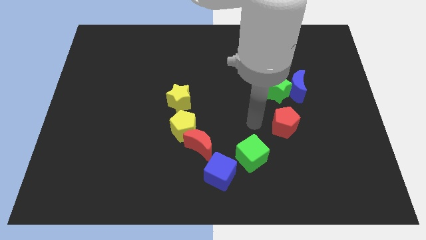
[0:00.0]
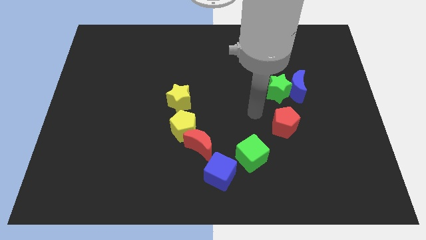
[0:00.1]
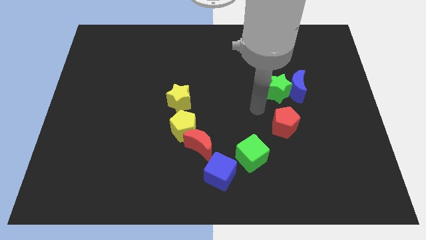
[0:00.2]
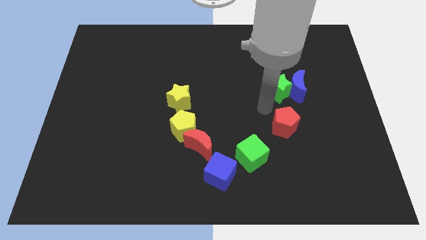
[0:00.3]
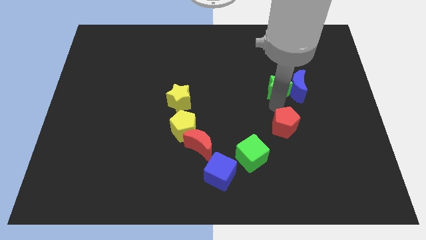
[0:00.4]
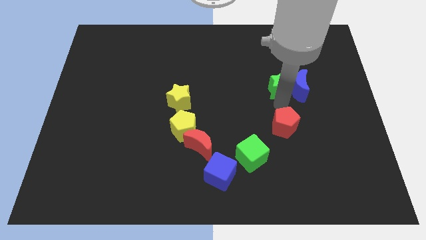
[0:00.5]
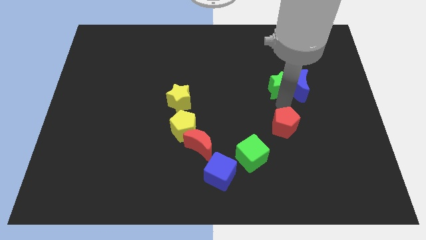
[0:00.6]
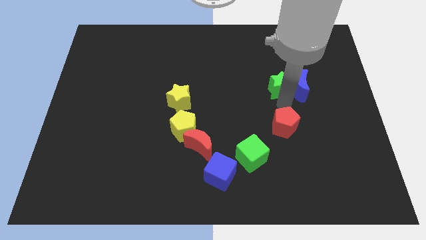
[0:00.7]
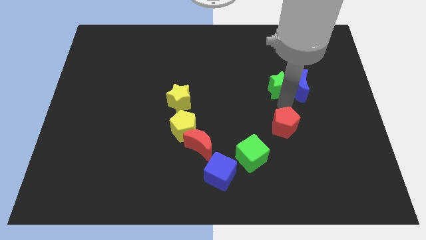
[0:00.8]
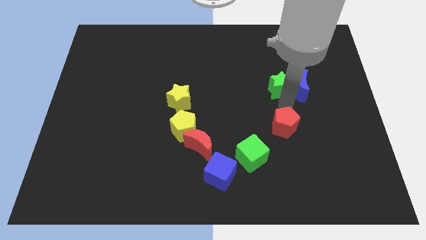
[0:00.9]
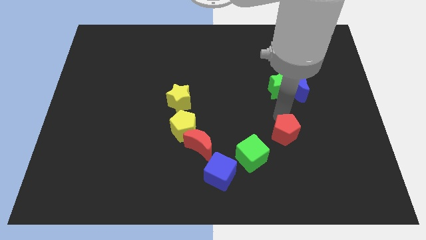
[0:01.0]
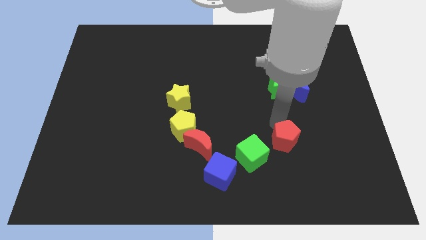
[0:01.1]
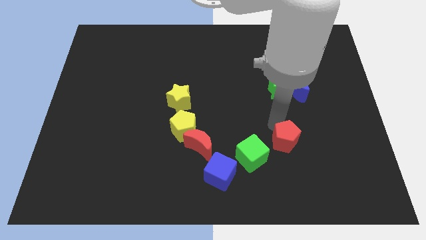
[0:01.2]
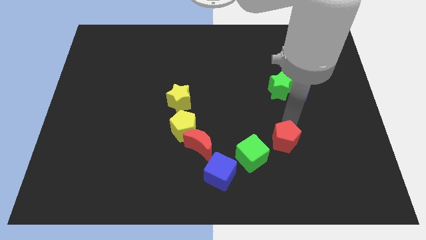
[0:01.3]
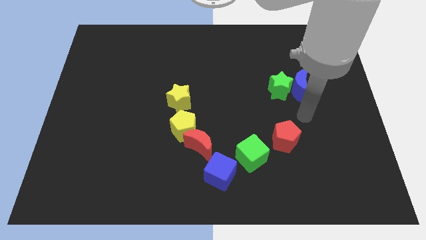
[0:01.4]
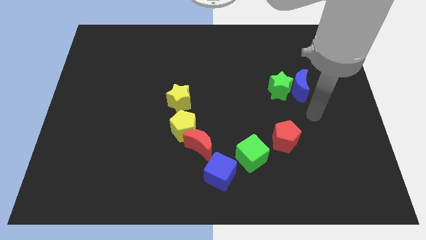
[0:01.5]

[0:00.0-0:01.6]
separate red pentagon and green star

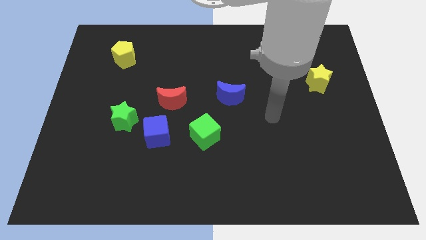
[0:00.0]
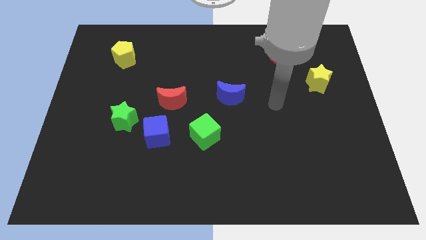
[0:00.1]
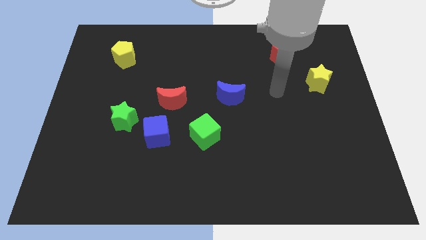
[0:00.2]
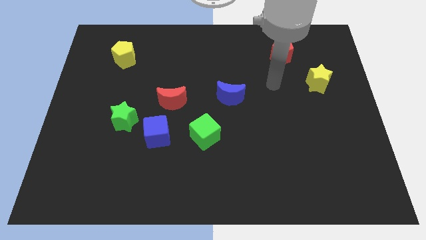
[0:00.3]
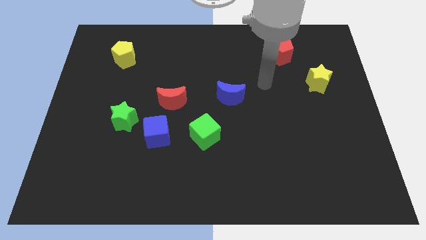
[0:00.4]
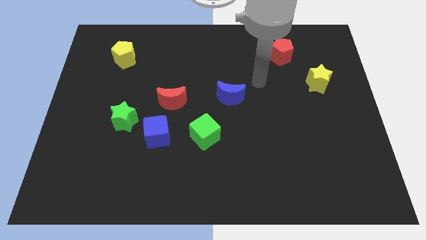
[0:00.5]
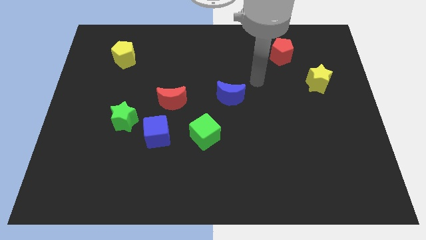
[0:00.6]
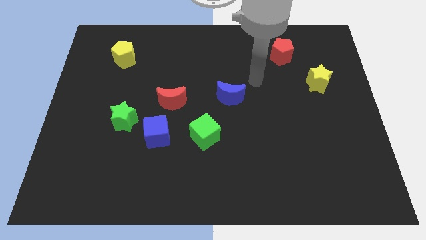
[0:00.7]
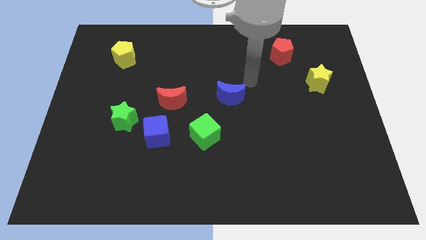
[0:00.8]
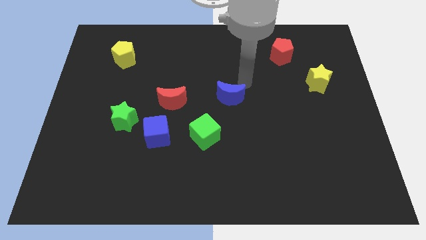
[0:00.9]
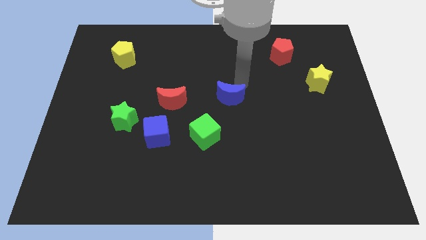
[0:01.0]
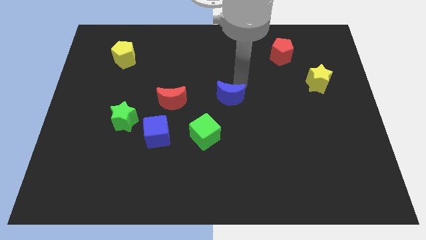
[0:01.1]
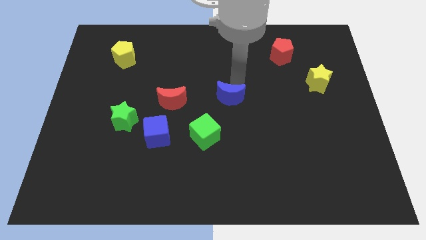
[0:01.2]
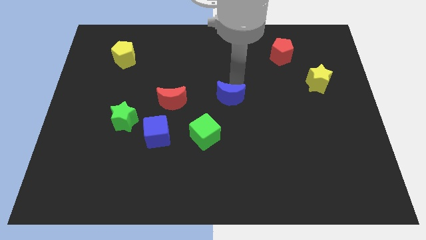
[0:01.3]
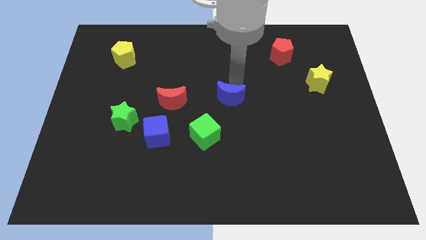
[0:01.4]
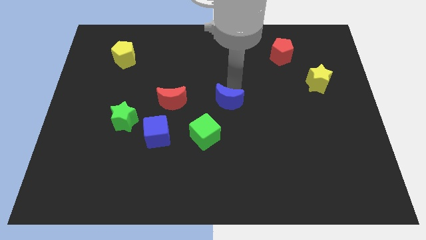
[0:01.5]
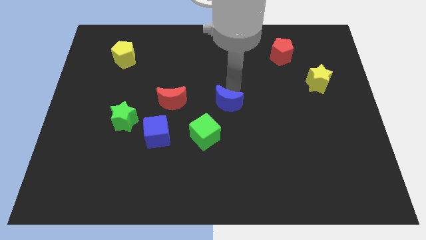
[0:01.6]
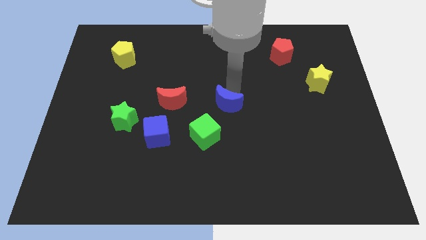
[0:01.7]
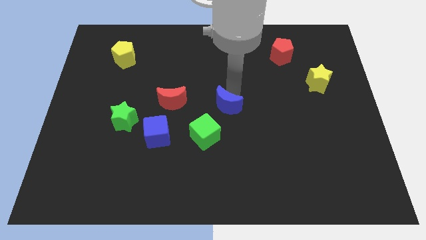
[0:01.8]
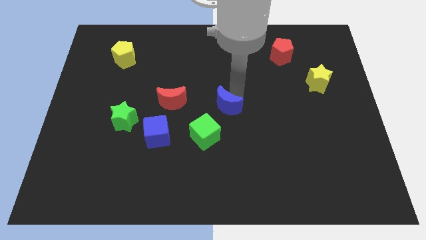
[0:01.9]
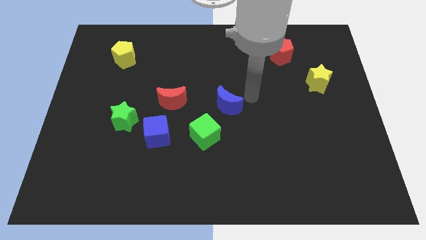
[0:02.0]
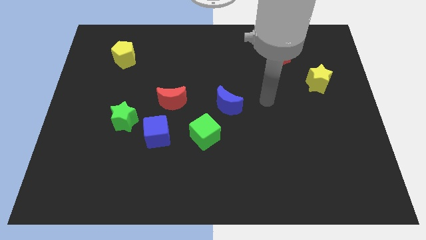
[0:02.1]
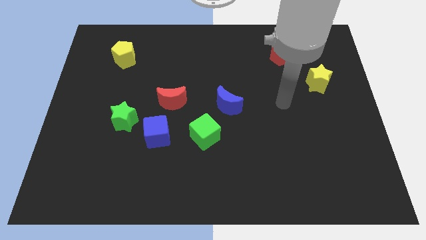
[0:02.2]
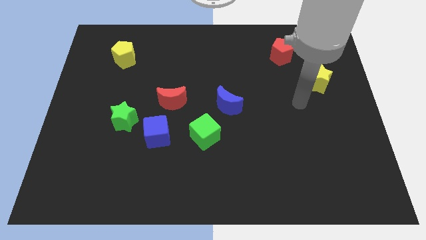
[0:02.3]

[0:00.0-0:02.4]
move the blue crescent diagonally right of the green cube

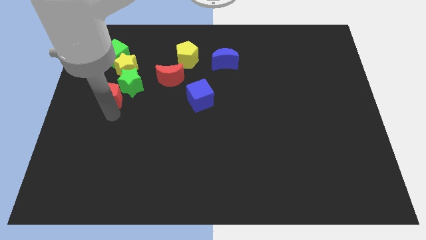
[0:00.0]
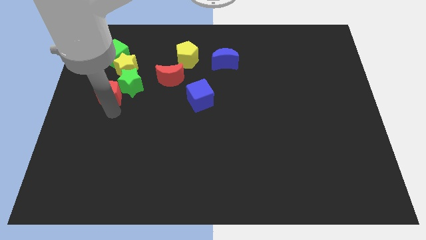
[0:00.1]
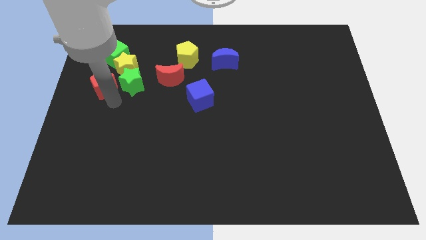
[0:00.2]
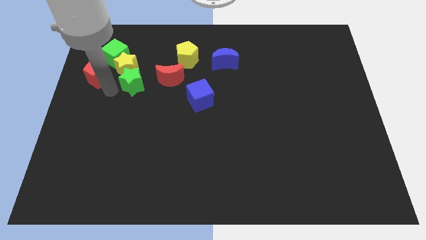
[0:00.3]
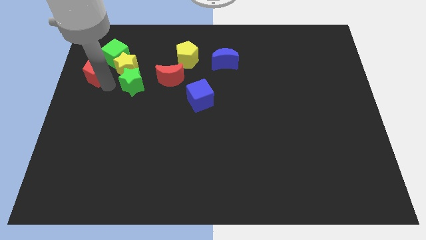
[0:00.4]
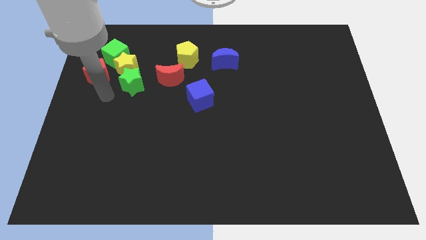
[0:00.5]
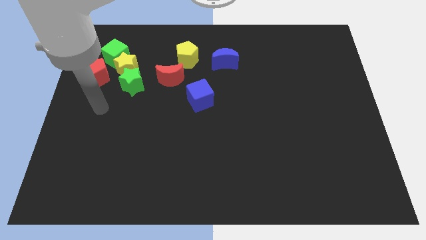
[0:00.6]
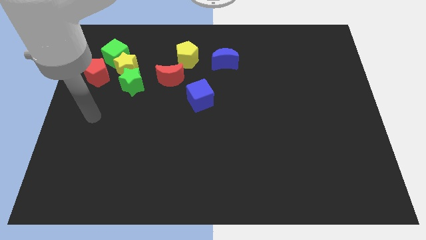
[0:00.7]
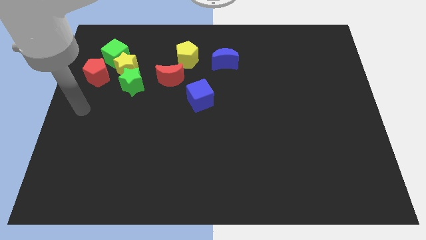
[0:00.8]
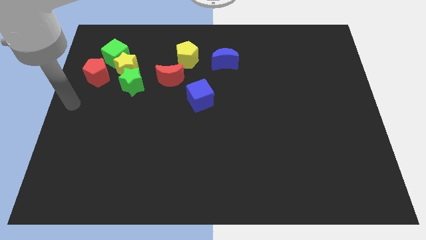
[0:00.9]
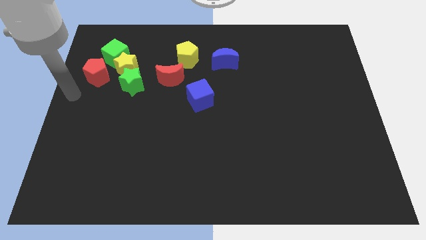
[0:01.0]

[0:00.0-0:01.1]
move the red pentagon to the top left of the green star

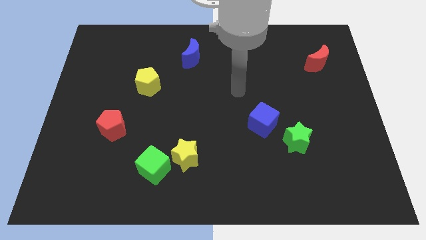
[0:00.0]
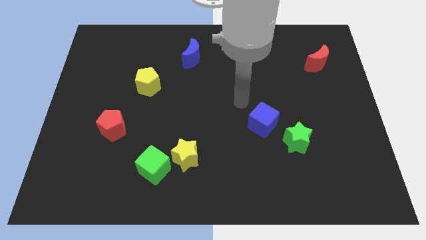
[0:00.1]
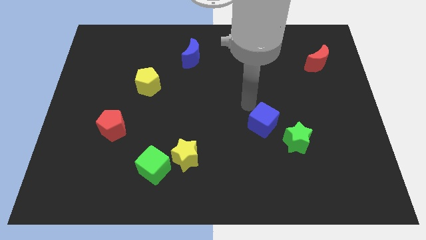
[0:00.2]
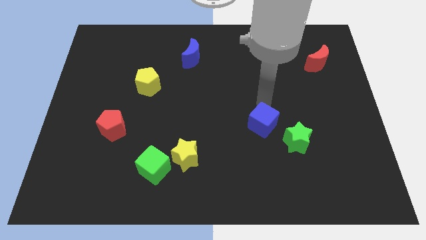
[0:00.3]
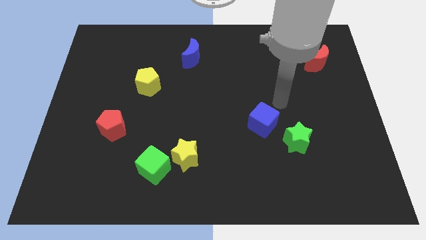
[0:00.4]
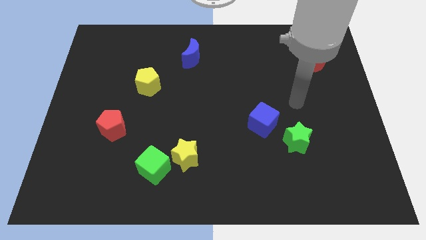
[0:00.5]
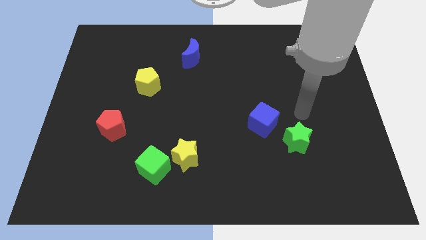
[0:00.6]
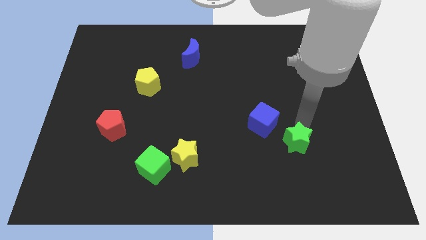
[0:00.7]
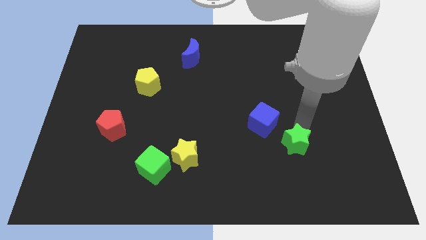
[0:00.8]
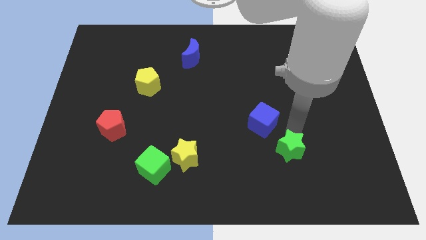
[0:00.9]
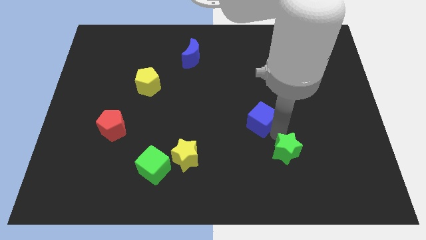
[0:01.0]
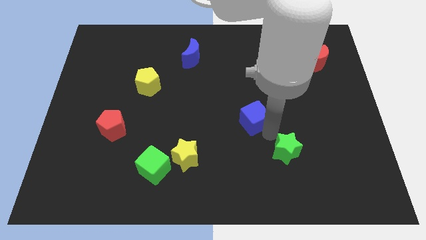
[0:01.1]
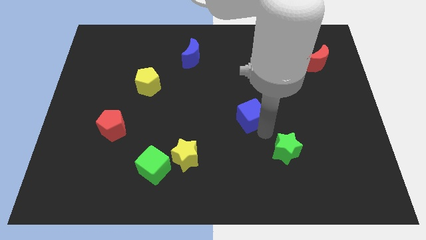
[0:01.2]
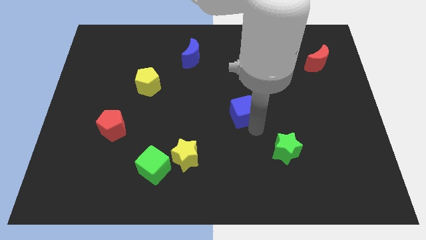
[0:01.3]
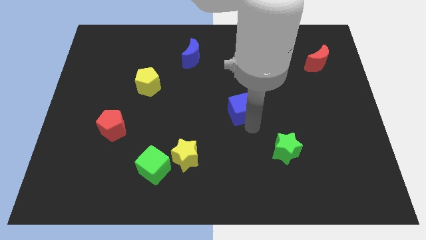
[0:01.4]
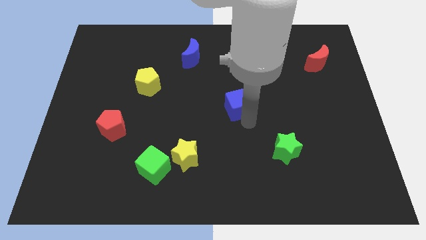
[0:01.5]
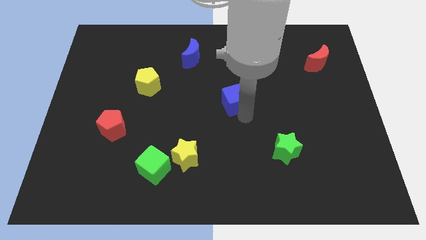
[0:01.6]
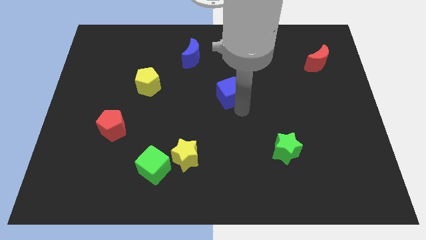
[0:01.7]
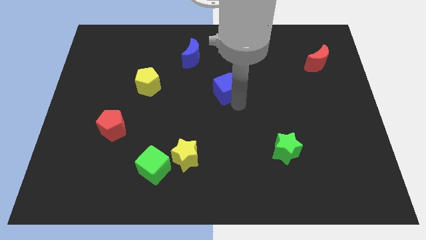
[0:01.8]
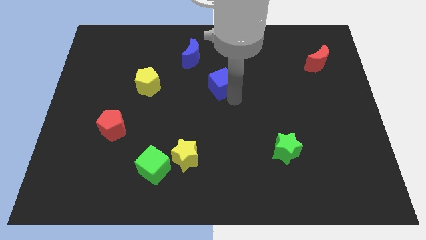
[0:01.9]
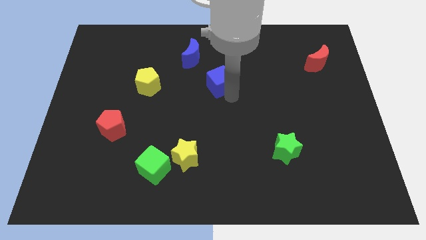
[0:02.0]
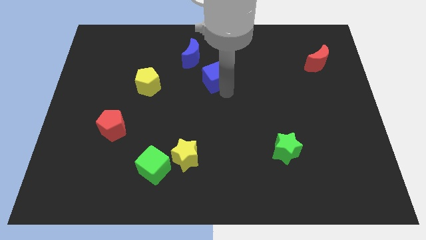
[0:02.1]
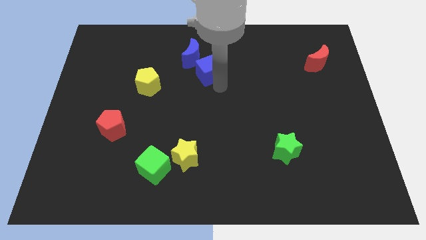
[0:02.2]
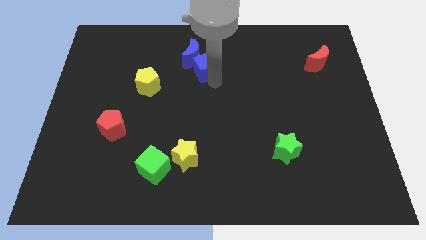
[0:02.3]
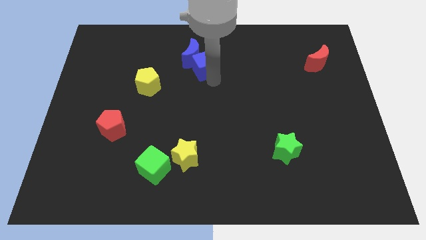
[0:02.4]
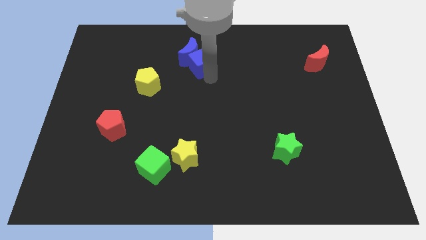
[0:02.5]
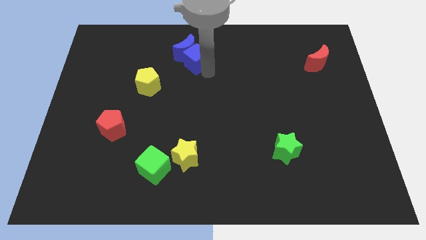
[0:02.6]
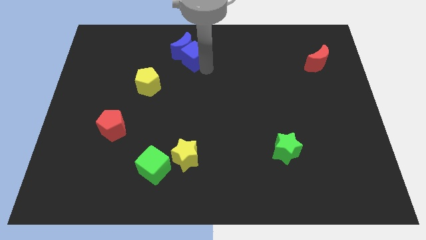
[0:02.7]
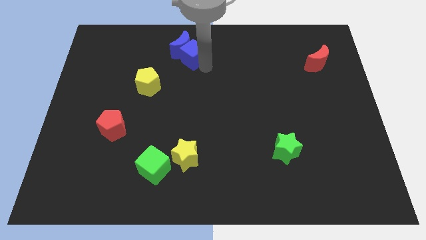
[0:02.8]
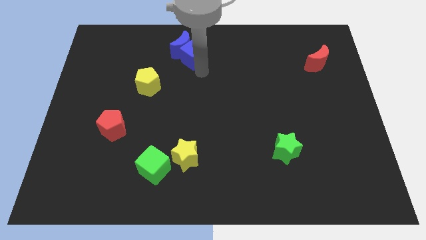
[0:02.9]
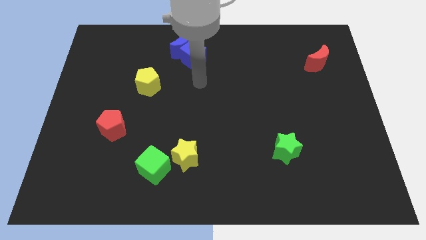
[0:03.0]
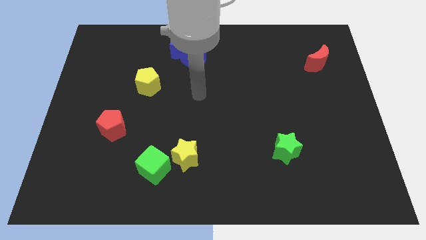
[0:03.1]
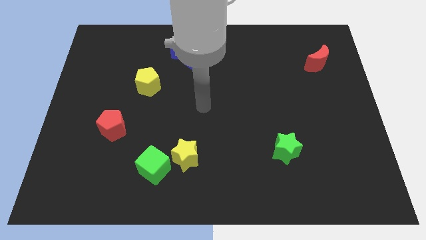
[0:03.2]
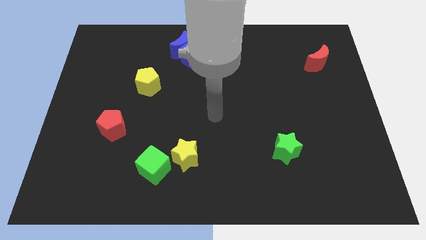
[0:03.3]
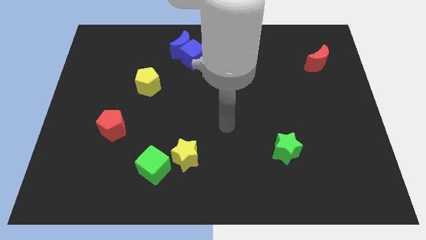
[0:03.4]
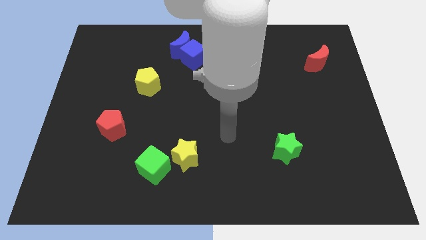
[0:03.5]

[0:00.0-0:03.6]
push the blue cube into the blue crescent

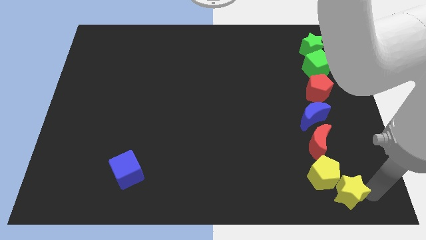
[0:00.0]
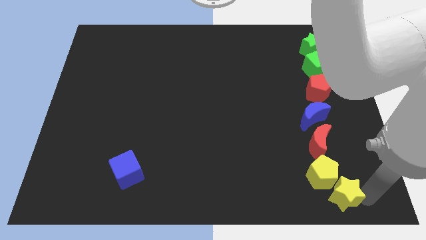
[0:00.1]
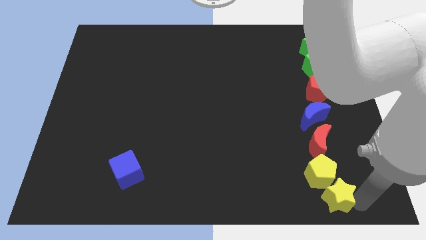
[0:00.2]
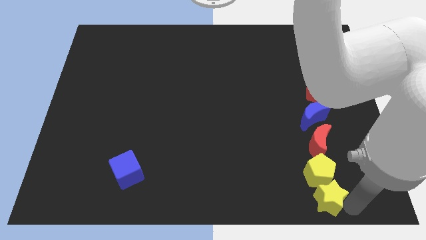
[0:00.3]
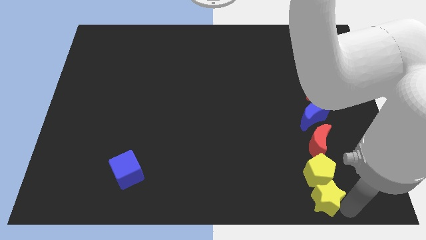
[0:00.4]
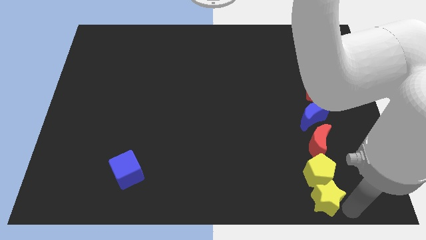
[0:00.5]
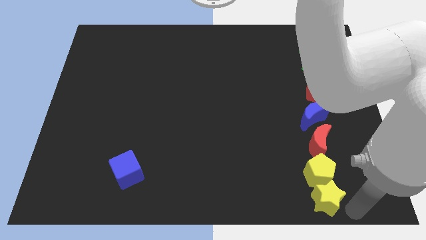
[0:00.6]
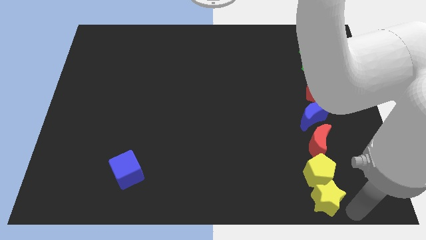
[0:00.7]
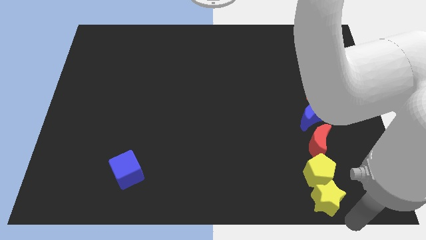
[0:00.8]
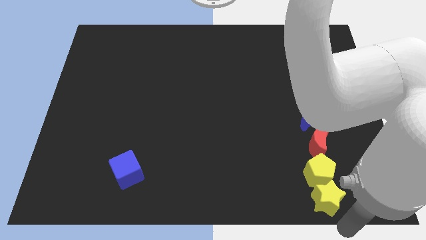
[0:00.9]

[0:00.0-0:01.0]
move the yellow star below the yellow pentagon
